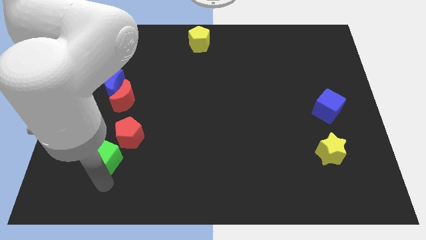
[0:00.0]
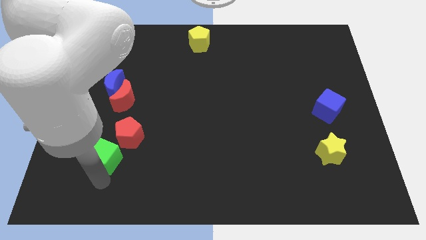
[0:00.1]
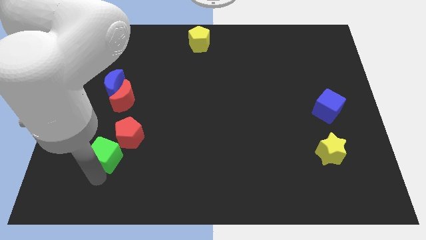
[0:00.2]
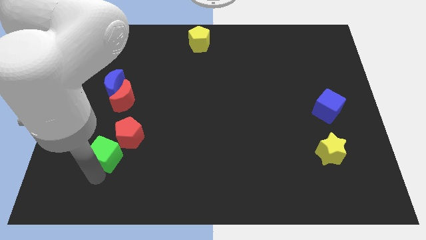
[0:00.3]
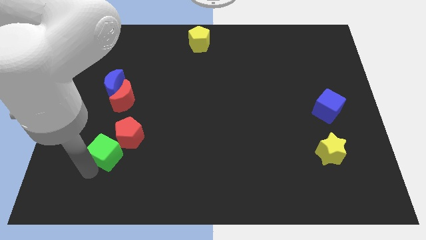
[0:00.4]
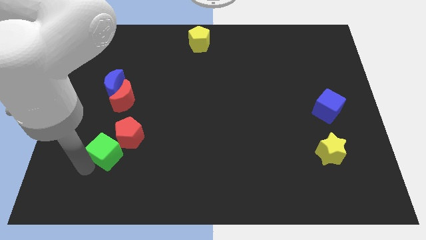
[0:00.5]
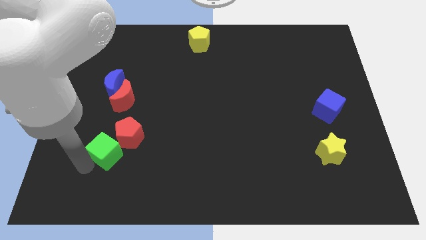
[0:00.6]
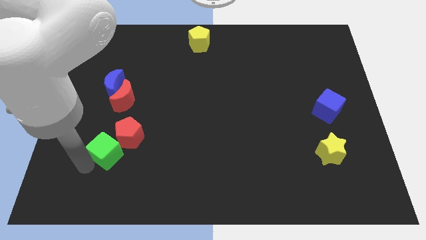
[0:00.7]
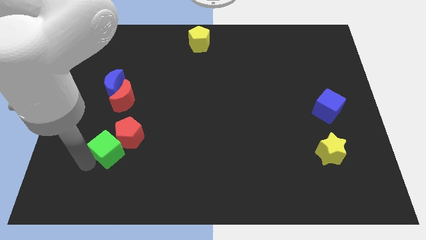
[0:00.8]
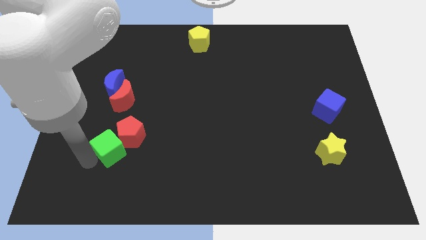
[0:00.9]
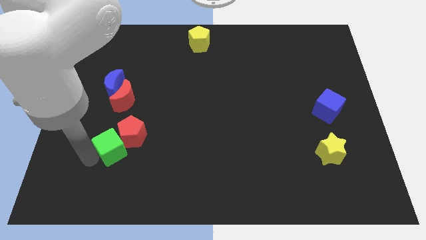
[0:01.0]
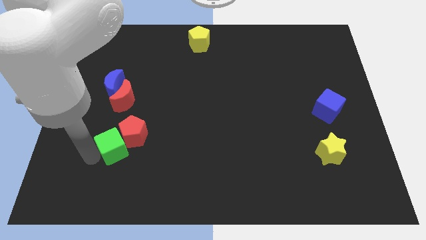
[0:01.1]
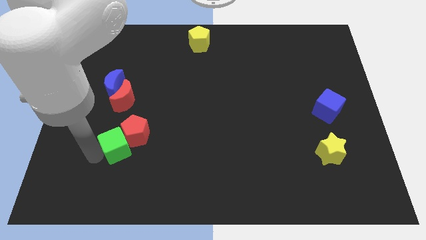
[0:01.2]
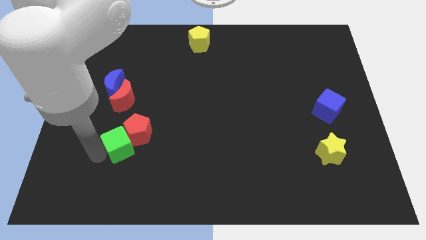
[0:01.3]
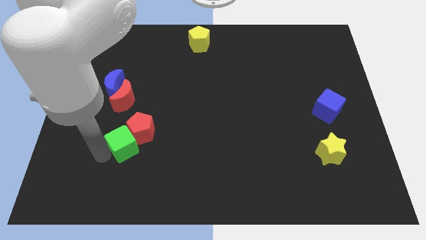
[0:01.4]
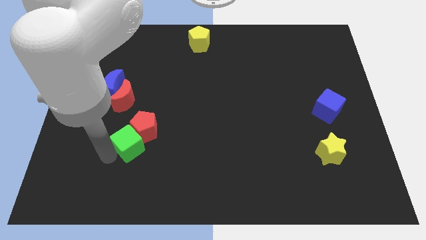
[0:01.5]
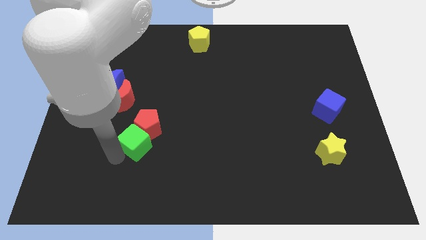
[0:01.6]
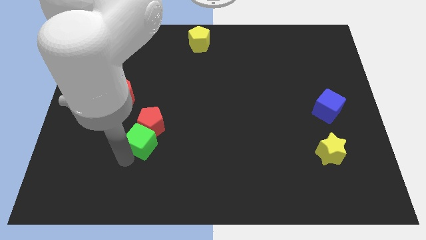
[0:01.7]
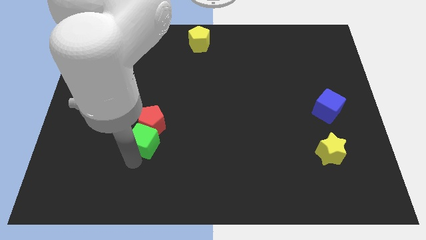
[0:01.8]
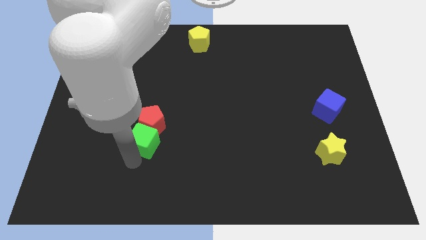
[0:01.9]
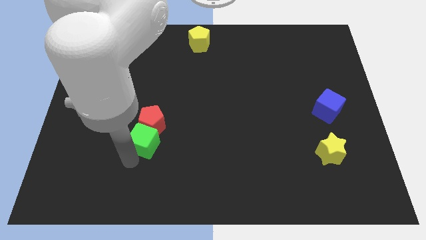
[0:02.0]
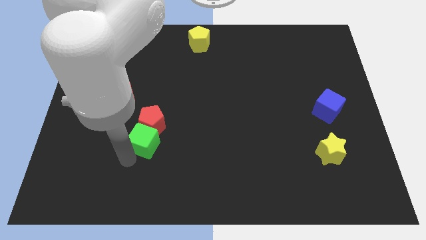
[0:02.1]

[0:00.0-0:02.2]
push the green cube in to the red pentagon

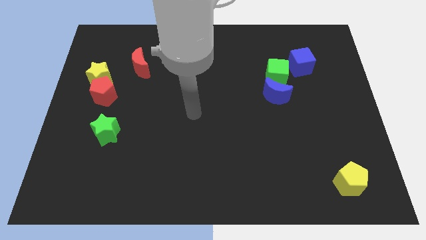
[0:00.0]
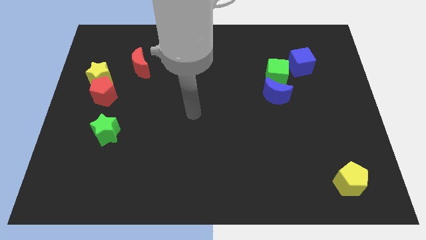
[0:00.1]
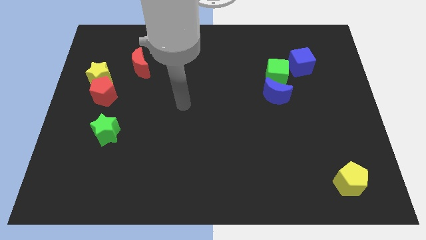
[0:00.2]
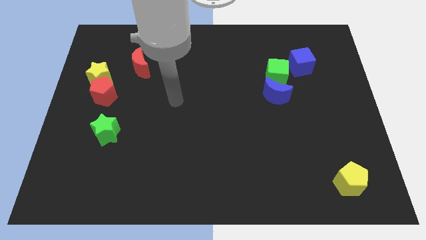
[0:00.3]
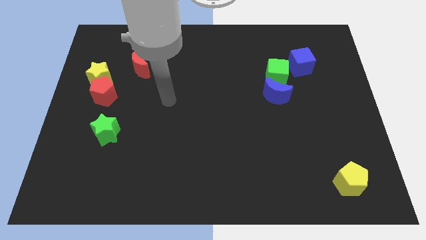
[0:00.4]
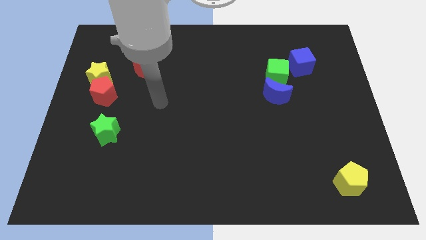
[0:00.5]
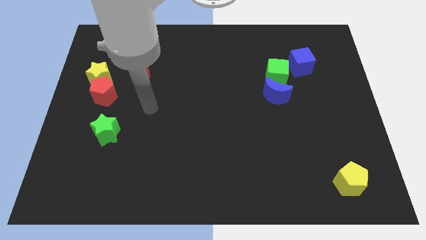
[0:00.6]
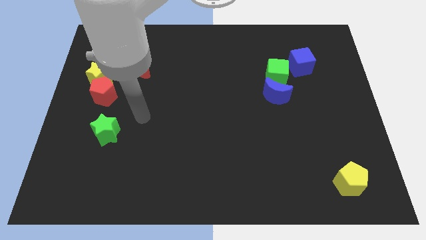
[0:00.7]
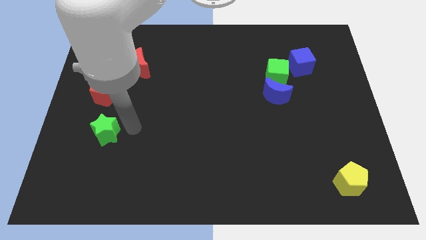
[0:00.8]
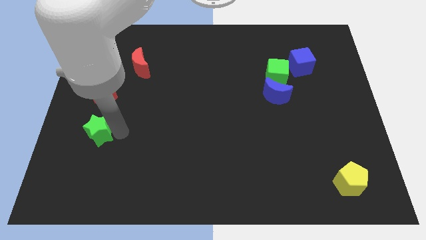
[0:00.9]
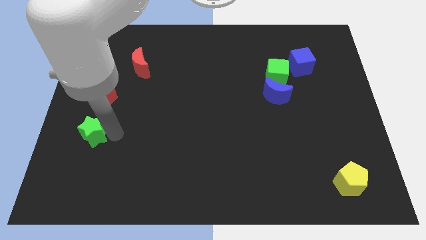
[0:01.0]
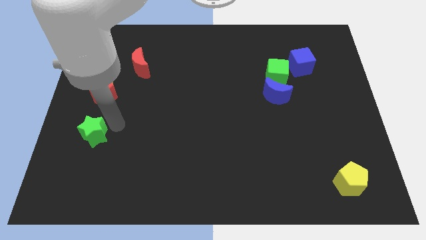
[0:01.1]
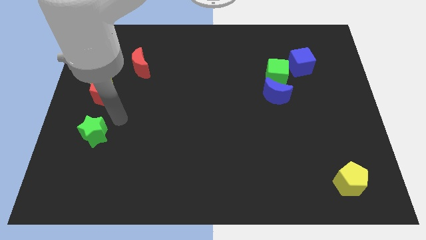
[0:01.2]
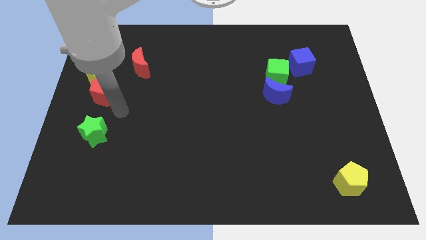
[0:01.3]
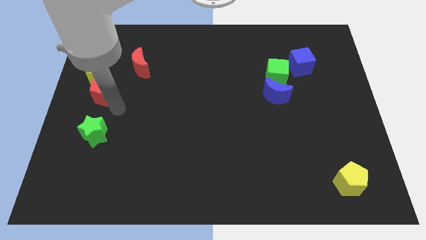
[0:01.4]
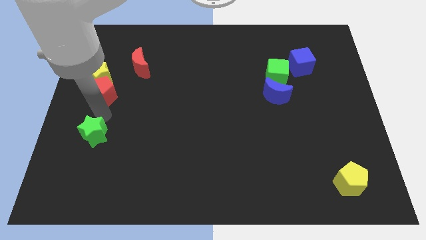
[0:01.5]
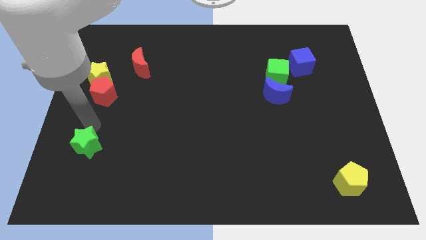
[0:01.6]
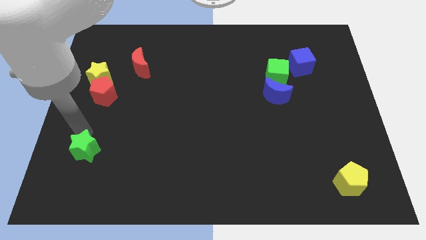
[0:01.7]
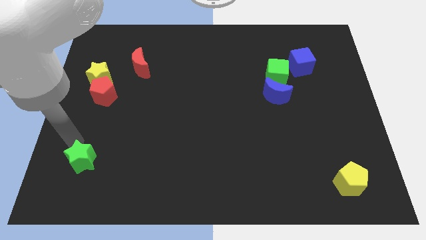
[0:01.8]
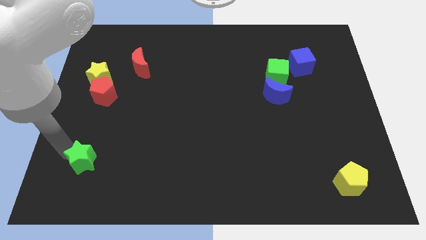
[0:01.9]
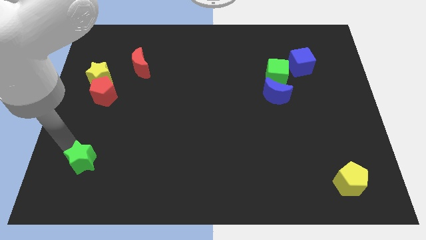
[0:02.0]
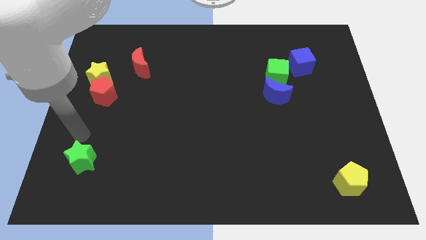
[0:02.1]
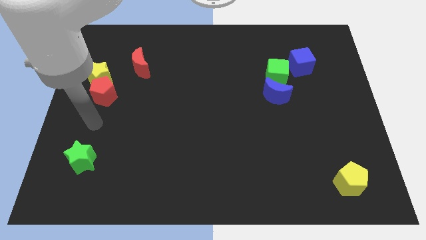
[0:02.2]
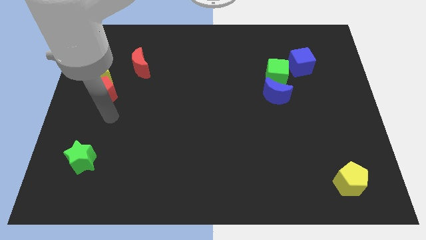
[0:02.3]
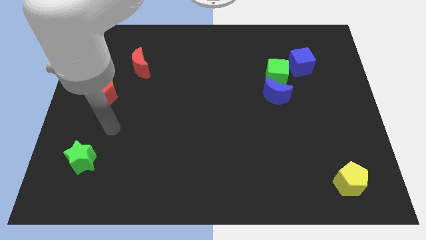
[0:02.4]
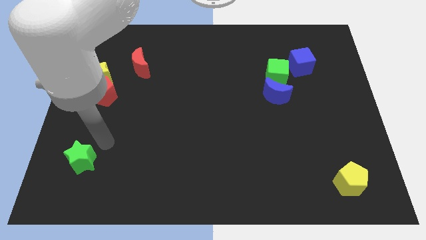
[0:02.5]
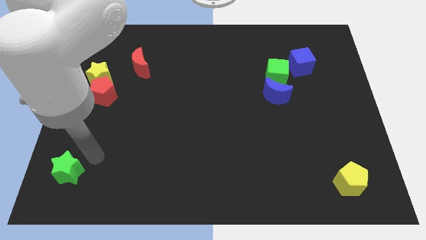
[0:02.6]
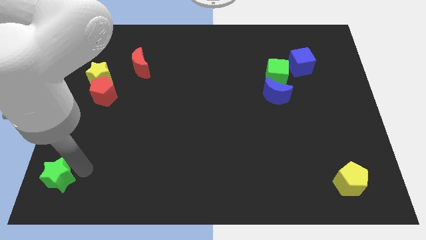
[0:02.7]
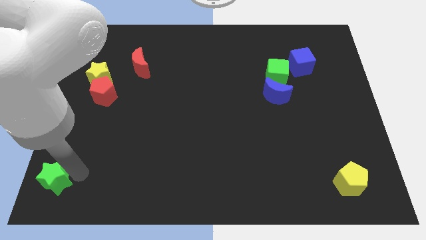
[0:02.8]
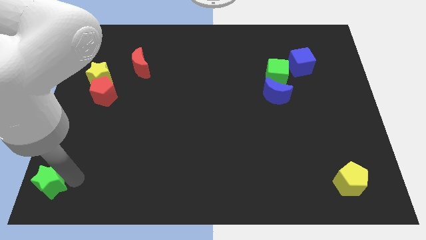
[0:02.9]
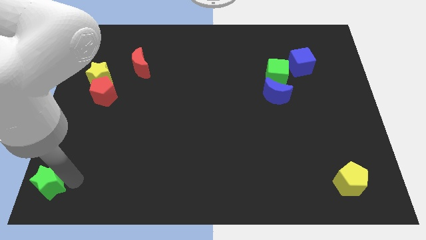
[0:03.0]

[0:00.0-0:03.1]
drag the green star to the bottom left corner

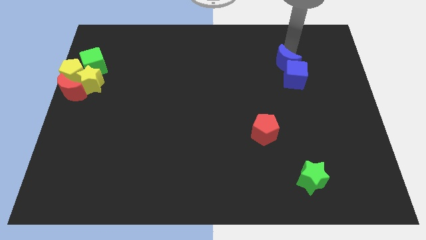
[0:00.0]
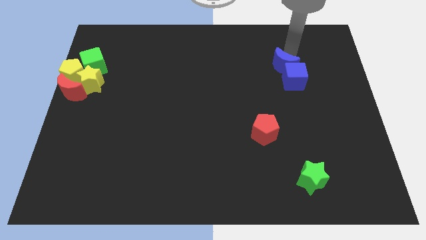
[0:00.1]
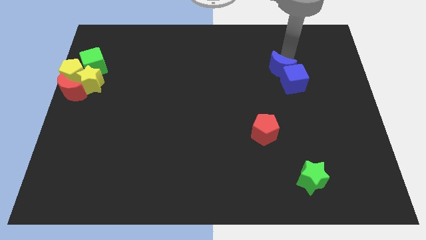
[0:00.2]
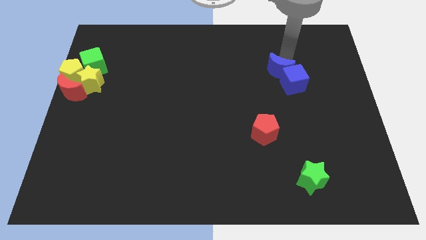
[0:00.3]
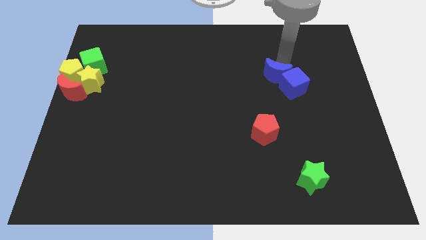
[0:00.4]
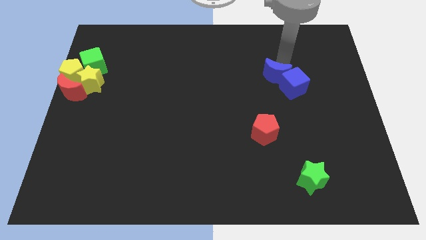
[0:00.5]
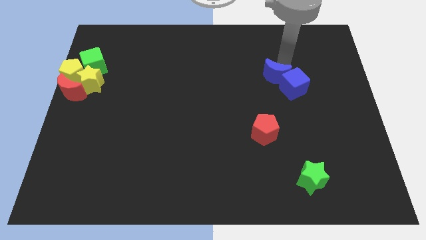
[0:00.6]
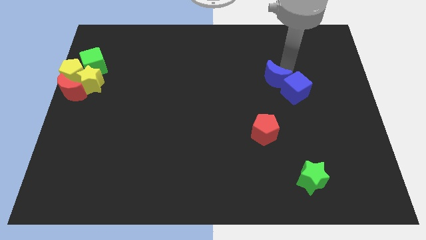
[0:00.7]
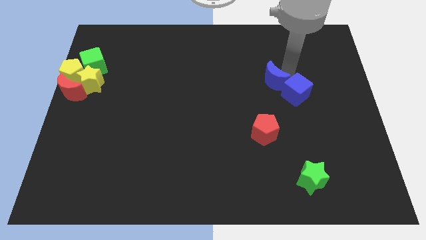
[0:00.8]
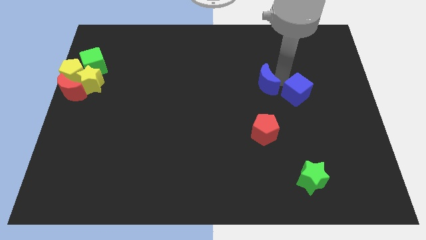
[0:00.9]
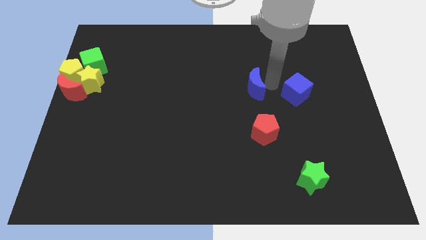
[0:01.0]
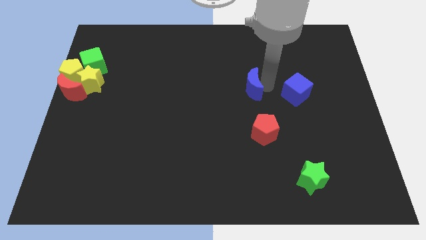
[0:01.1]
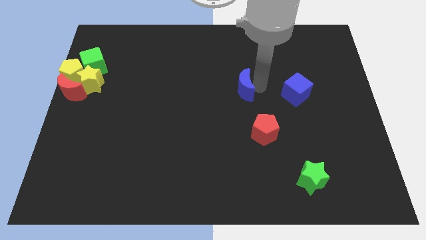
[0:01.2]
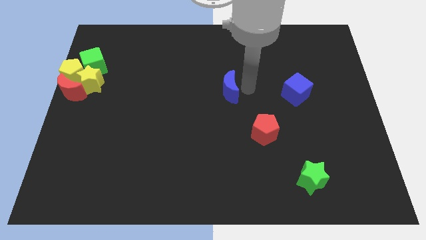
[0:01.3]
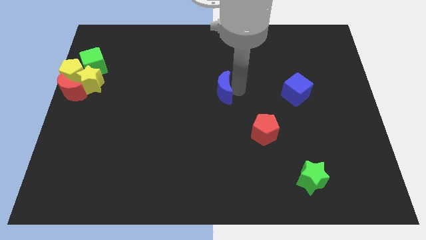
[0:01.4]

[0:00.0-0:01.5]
separate blue moon and the blue cube

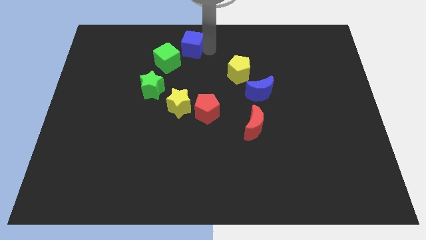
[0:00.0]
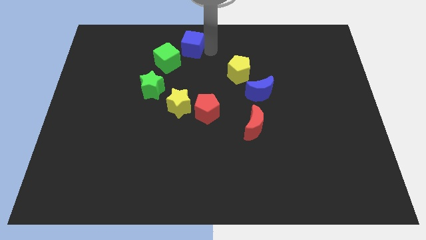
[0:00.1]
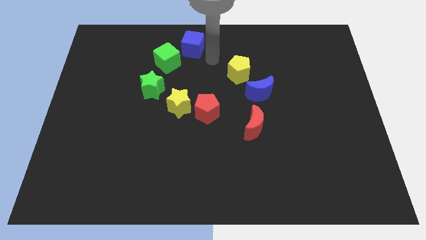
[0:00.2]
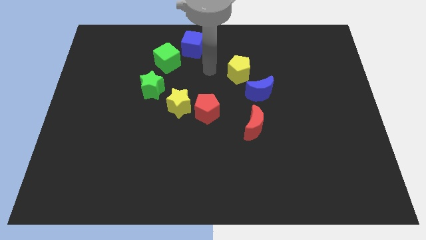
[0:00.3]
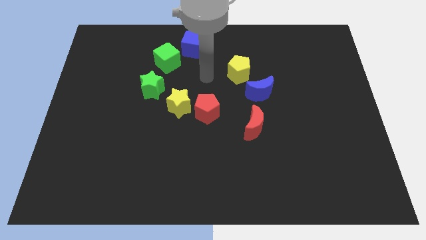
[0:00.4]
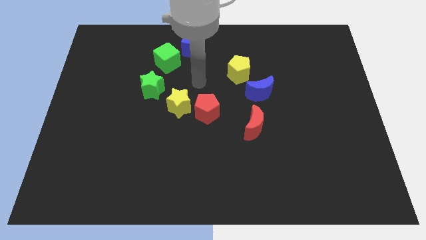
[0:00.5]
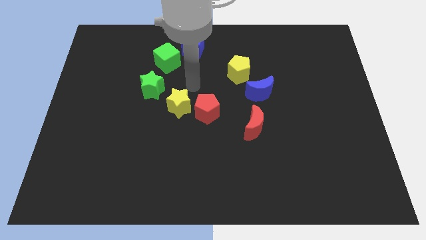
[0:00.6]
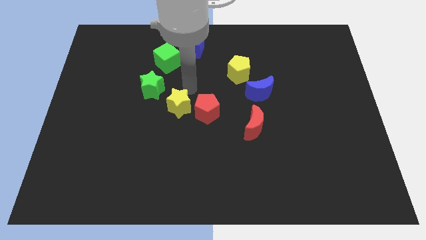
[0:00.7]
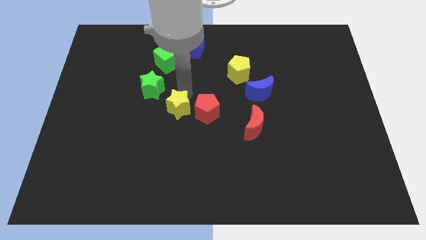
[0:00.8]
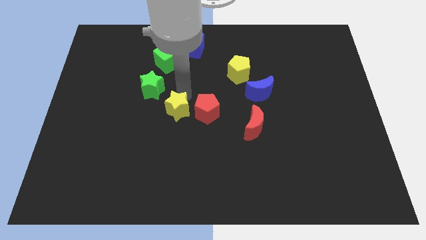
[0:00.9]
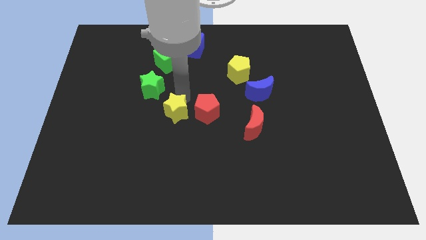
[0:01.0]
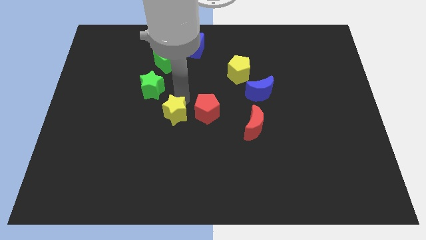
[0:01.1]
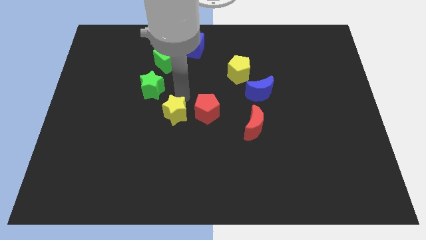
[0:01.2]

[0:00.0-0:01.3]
slightly push the yellow star down

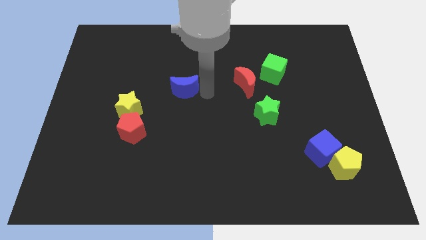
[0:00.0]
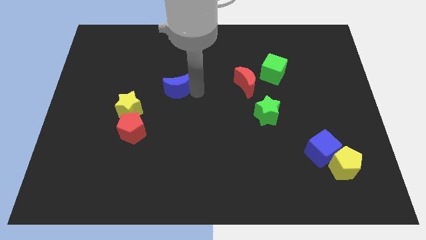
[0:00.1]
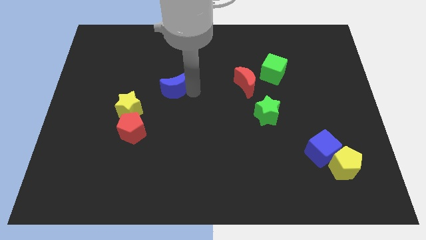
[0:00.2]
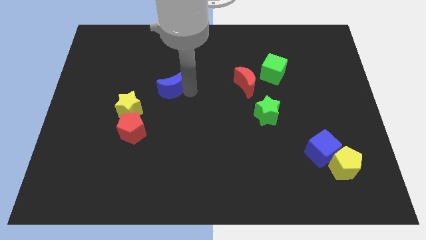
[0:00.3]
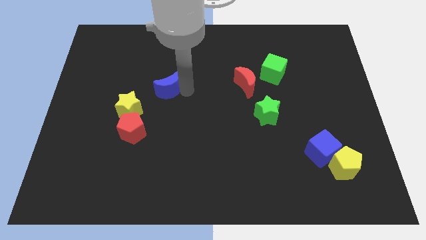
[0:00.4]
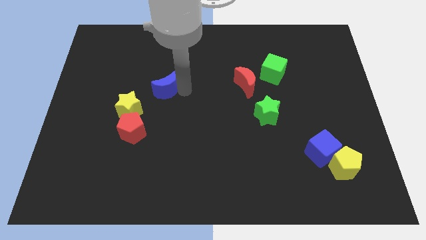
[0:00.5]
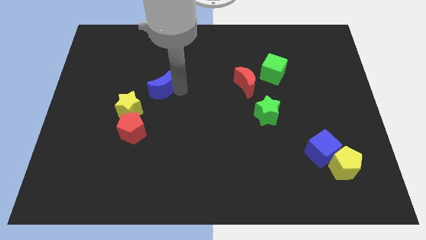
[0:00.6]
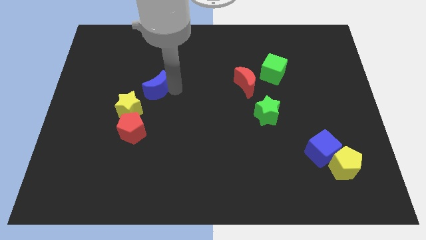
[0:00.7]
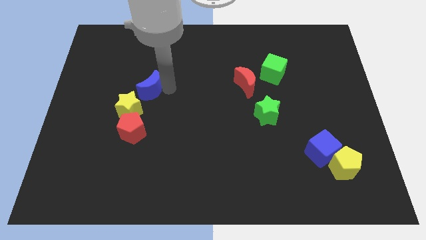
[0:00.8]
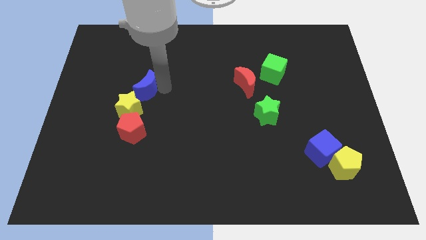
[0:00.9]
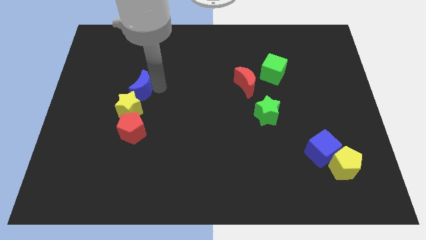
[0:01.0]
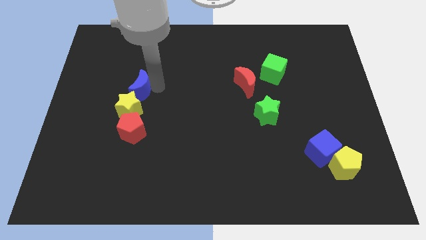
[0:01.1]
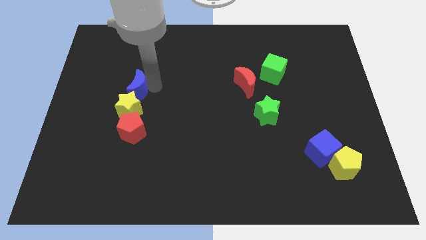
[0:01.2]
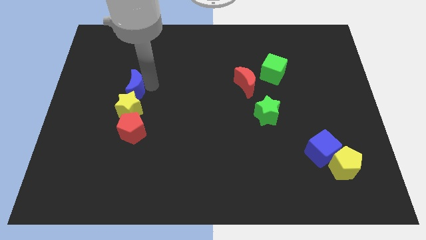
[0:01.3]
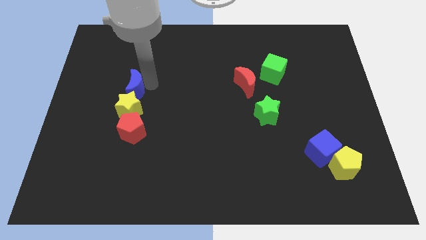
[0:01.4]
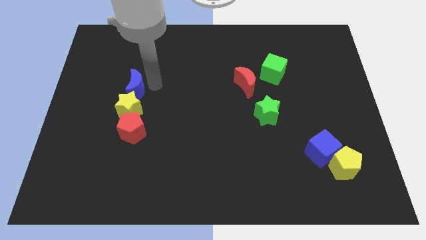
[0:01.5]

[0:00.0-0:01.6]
push the blue crescent to the top of the yellow star
